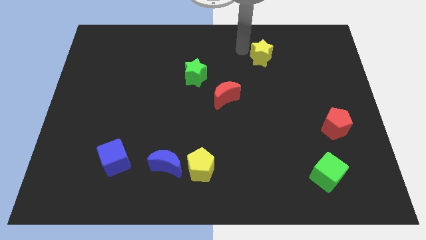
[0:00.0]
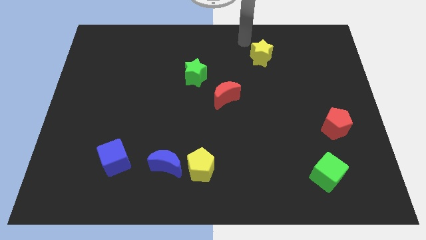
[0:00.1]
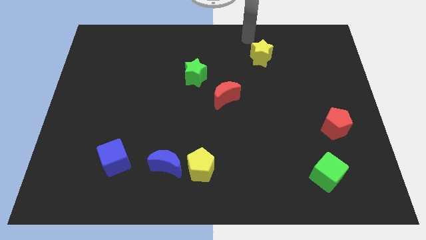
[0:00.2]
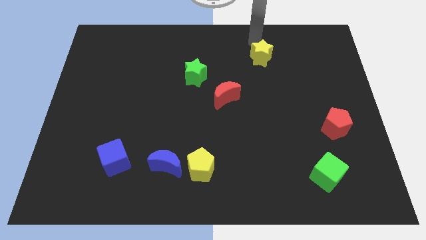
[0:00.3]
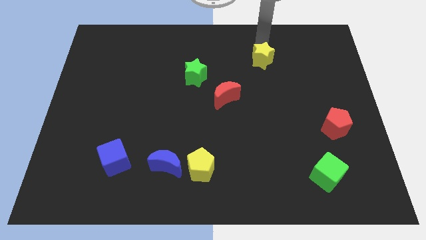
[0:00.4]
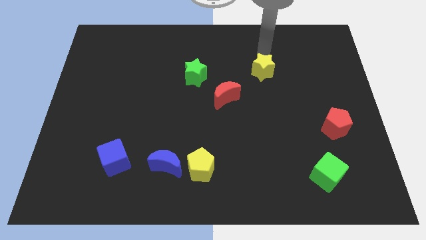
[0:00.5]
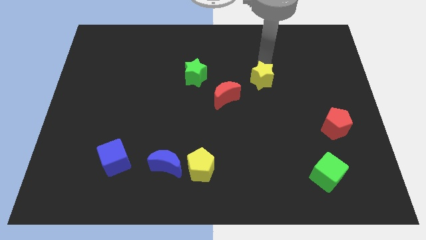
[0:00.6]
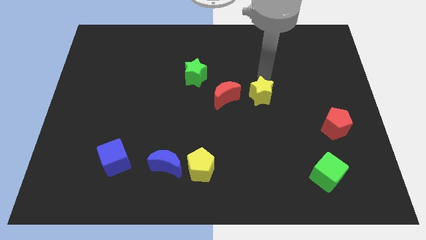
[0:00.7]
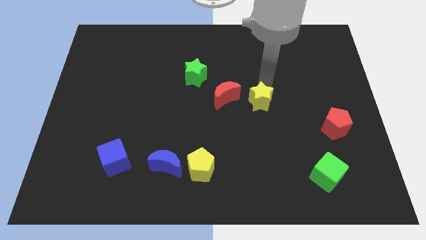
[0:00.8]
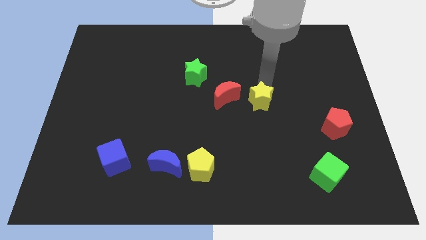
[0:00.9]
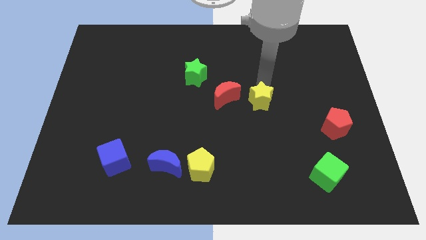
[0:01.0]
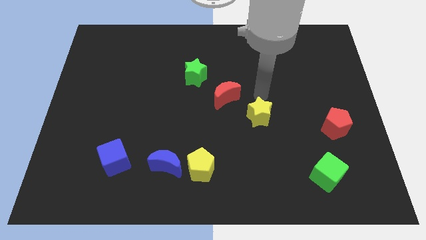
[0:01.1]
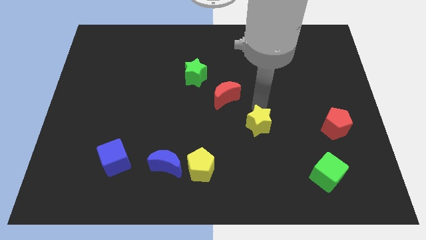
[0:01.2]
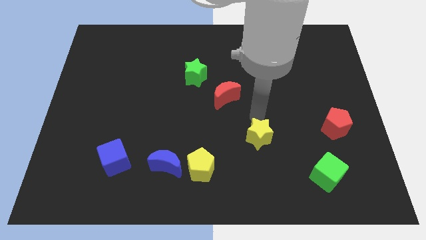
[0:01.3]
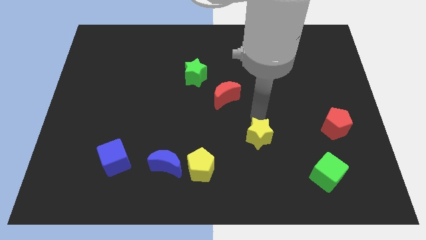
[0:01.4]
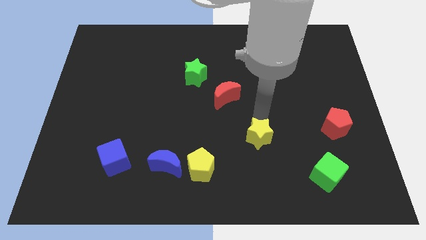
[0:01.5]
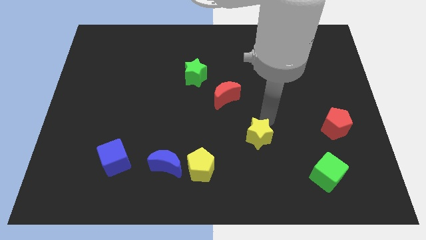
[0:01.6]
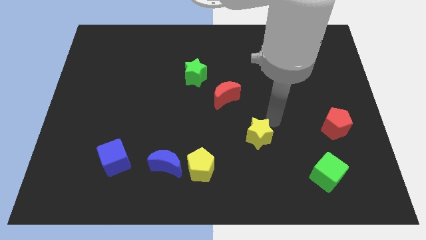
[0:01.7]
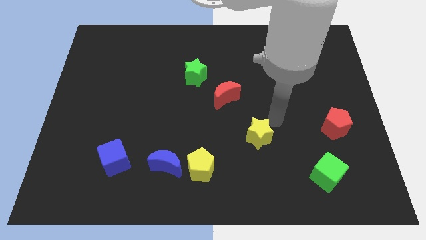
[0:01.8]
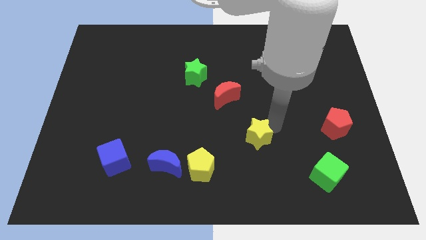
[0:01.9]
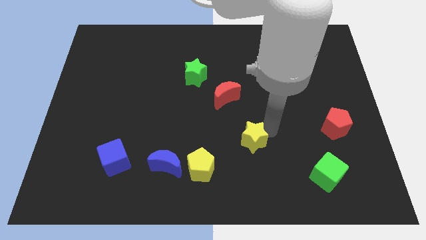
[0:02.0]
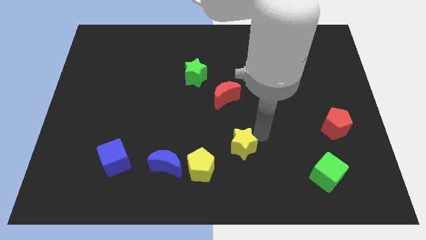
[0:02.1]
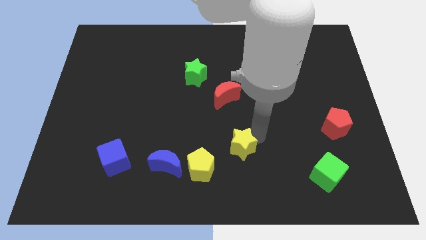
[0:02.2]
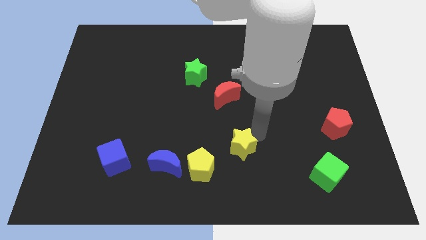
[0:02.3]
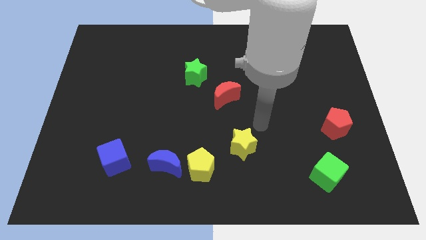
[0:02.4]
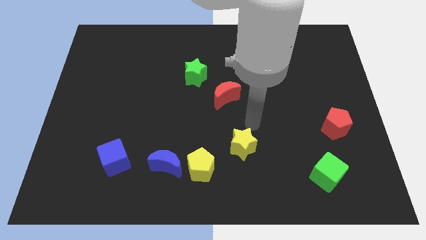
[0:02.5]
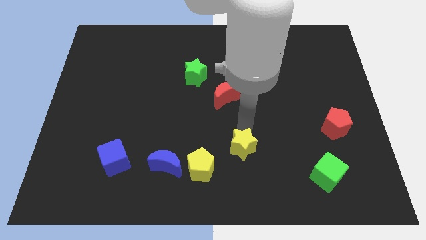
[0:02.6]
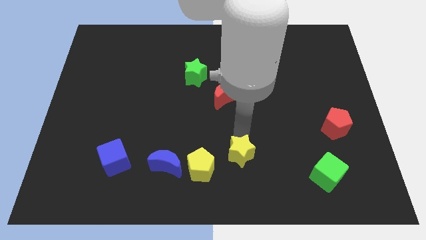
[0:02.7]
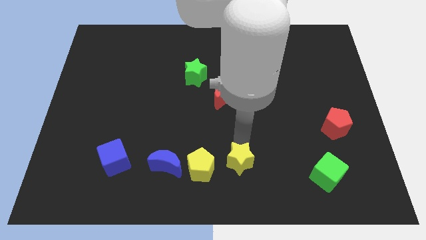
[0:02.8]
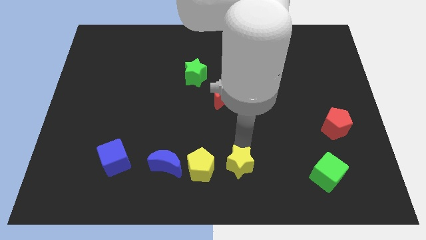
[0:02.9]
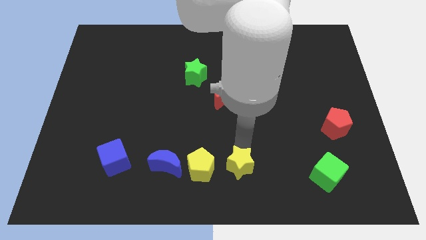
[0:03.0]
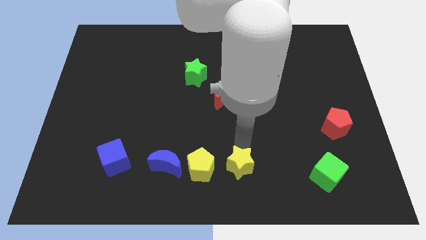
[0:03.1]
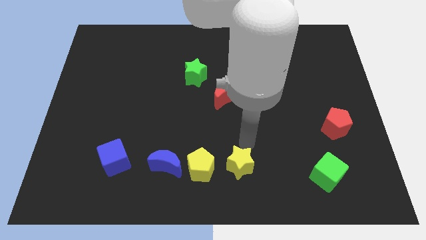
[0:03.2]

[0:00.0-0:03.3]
move the yellow star to the right of yellow pentagon

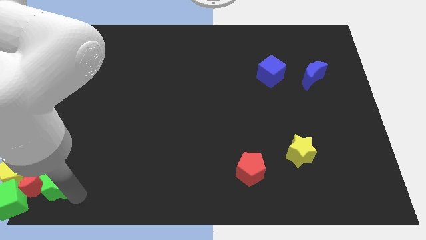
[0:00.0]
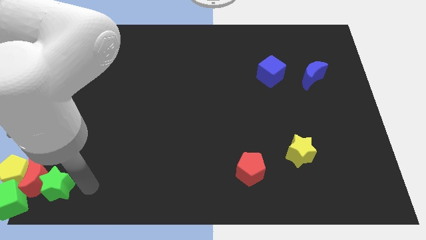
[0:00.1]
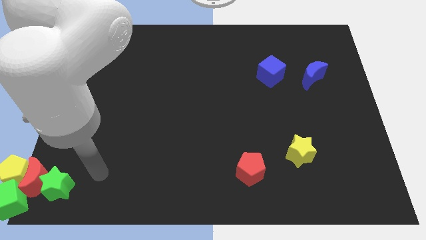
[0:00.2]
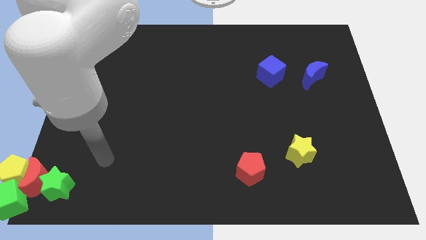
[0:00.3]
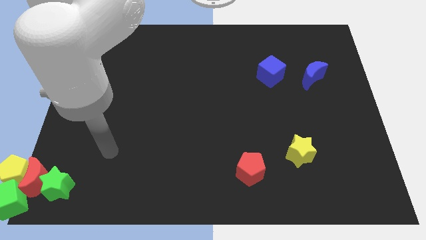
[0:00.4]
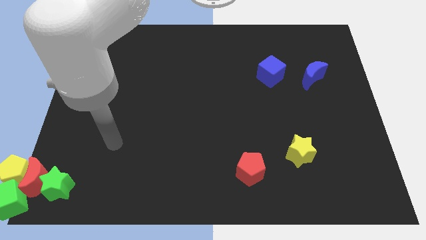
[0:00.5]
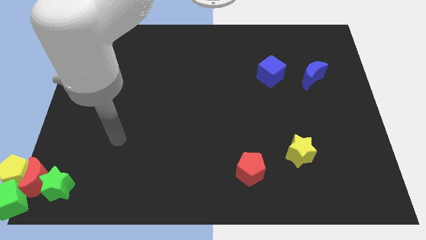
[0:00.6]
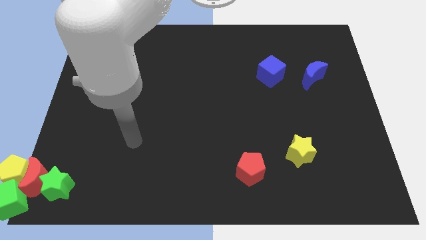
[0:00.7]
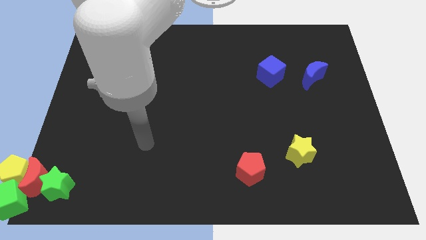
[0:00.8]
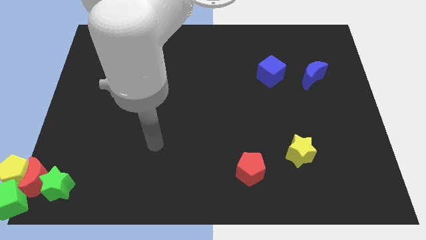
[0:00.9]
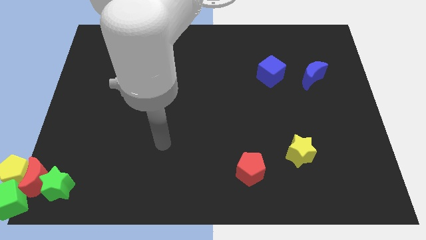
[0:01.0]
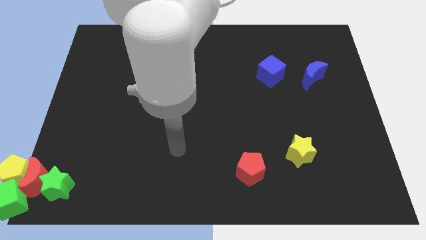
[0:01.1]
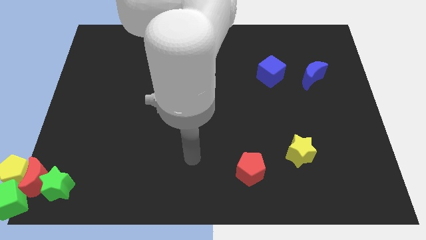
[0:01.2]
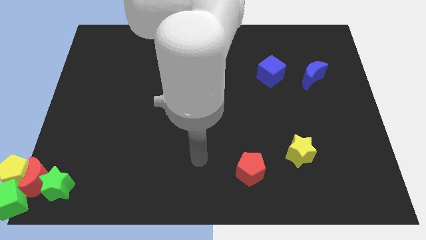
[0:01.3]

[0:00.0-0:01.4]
move your arm away from the bottom left side blocks

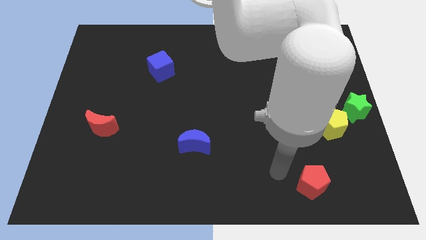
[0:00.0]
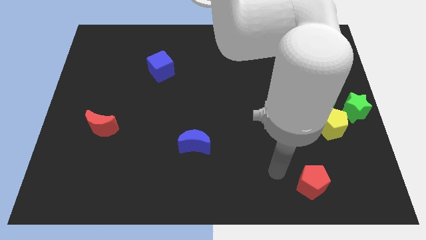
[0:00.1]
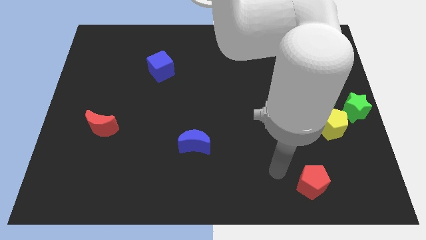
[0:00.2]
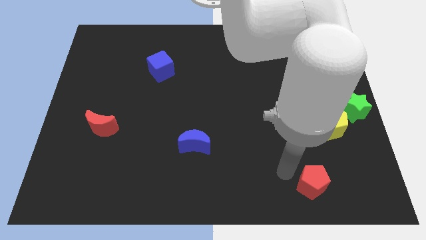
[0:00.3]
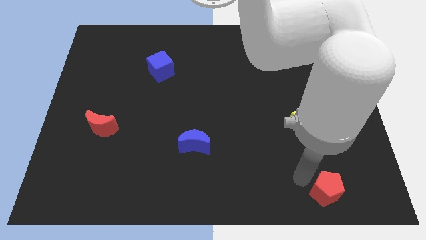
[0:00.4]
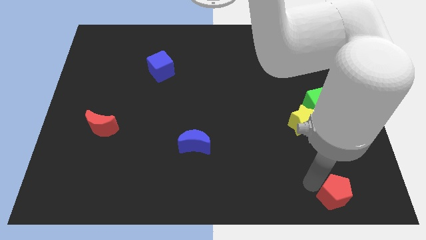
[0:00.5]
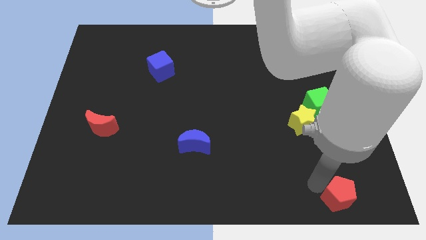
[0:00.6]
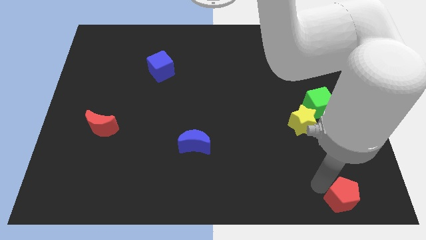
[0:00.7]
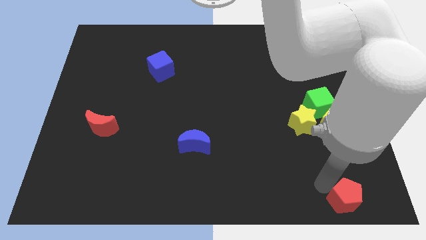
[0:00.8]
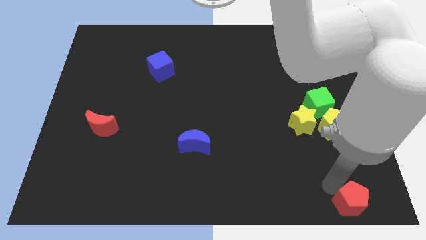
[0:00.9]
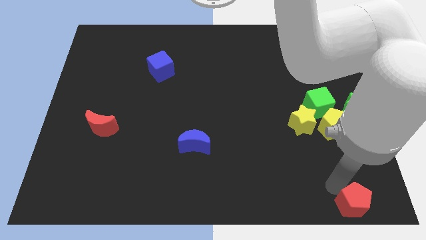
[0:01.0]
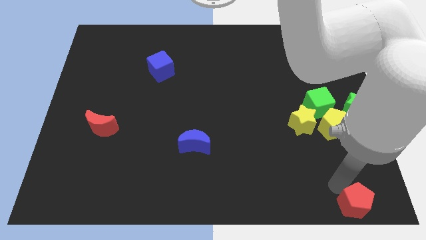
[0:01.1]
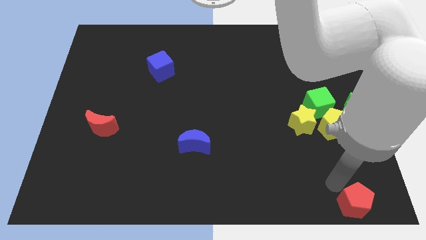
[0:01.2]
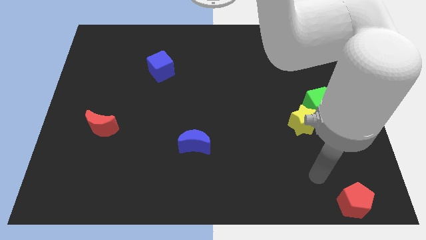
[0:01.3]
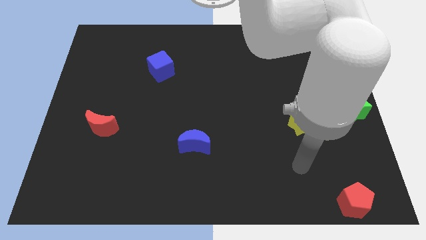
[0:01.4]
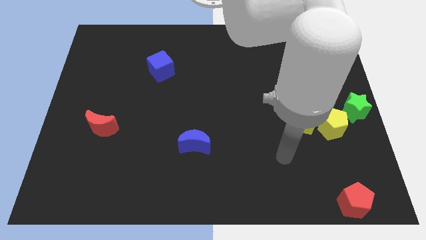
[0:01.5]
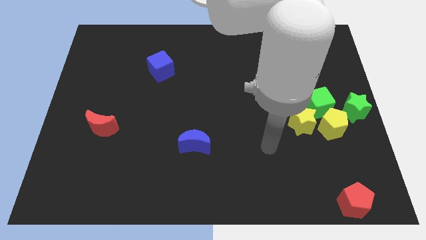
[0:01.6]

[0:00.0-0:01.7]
move the red pentagon towards the bottom right corner of the board

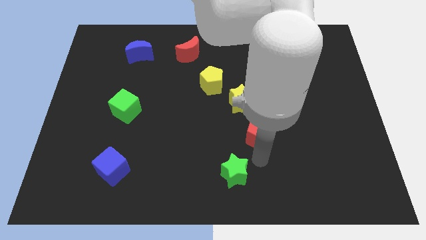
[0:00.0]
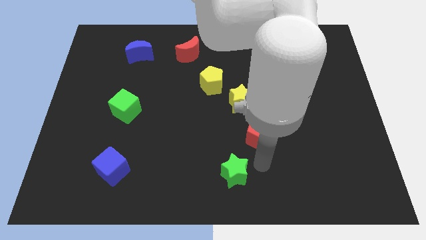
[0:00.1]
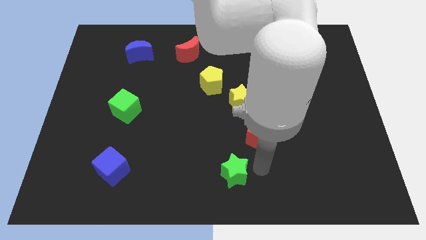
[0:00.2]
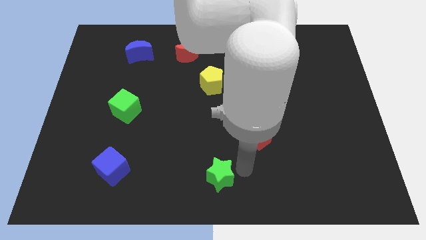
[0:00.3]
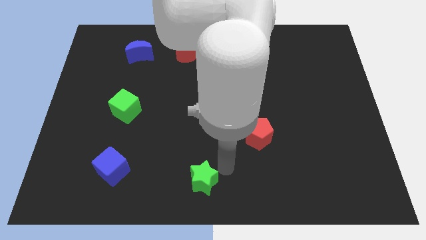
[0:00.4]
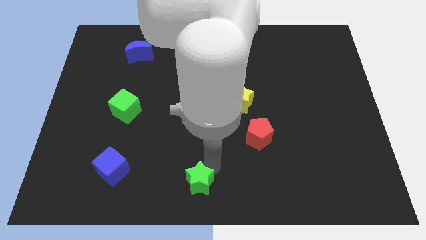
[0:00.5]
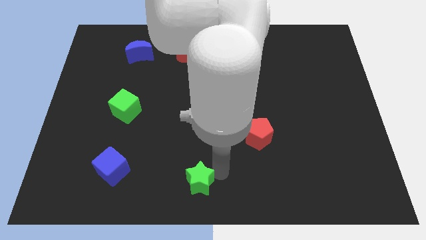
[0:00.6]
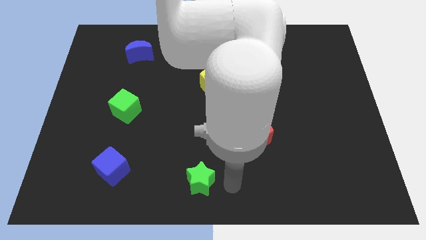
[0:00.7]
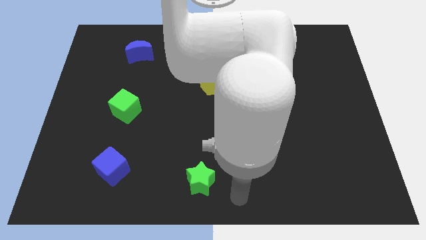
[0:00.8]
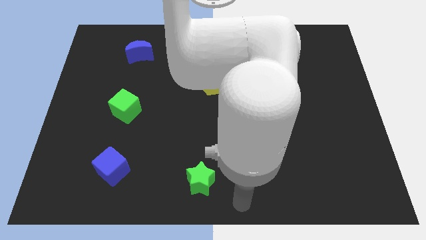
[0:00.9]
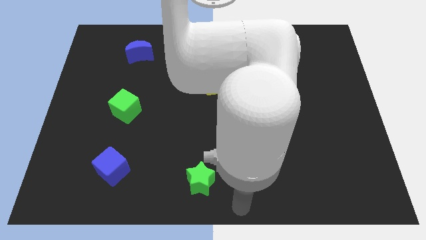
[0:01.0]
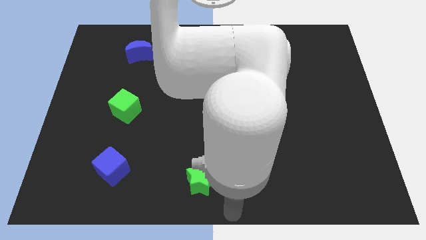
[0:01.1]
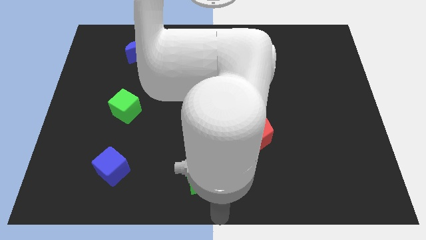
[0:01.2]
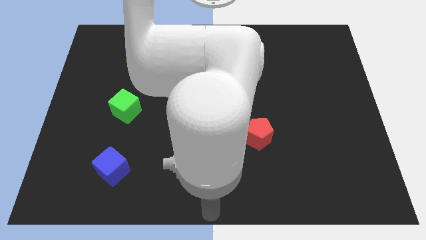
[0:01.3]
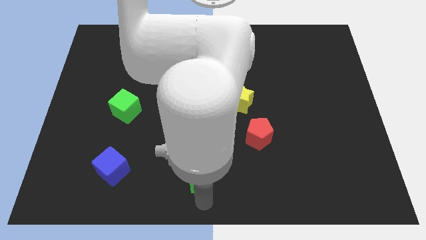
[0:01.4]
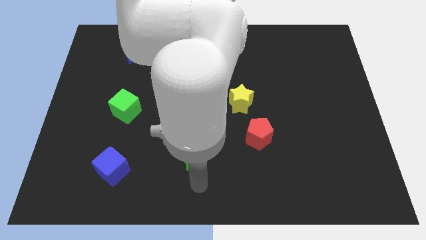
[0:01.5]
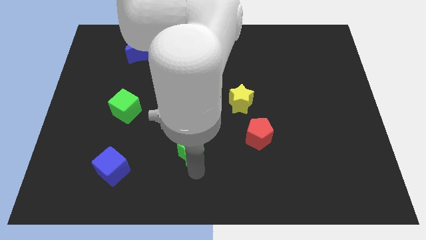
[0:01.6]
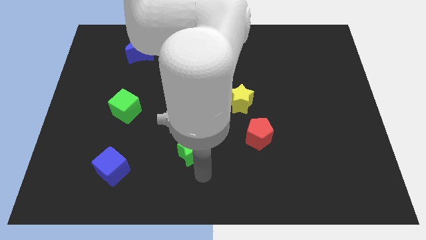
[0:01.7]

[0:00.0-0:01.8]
put the green star in between the red pentagon and blue cube

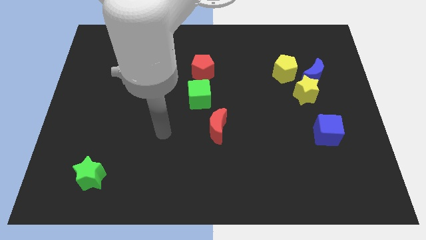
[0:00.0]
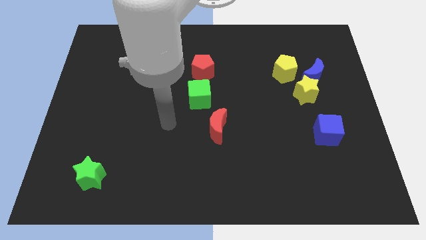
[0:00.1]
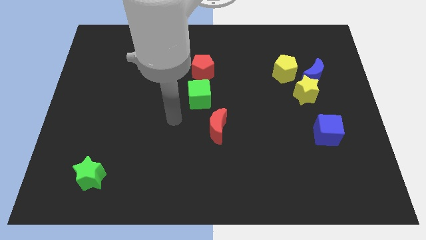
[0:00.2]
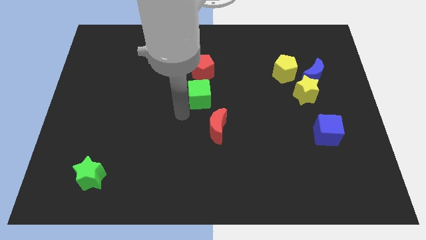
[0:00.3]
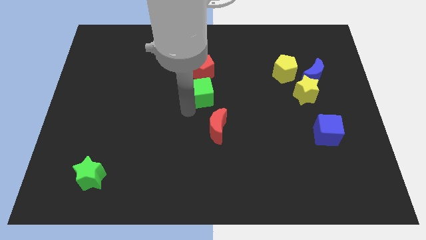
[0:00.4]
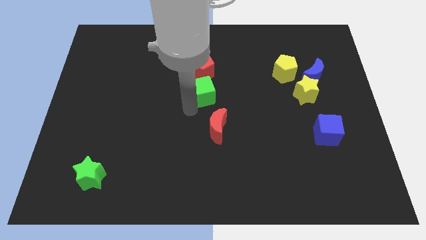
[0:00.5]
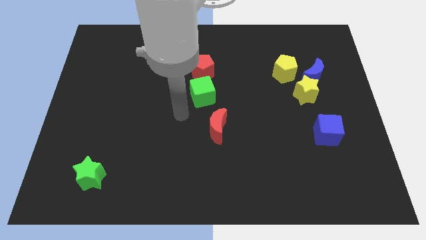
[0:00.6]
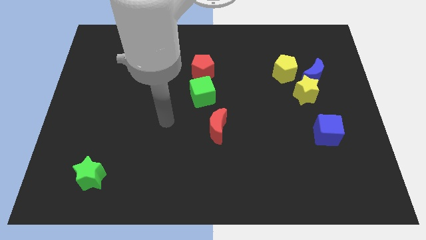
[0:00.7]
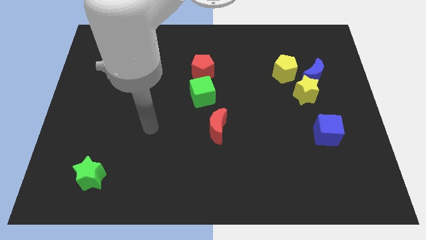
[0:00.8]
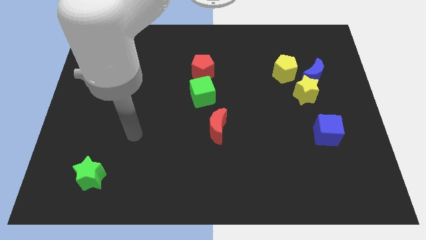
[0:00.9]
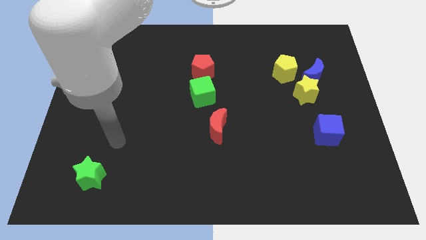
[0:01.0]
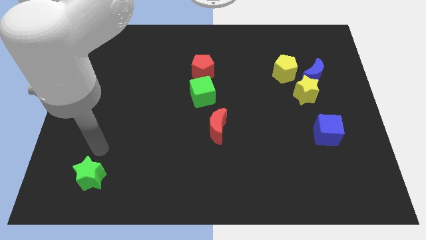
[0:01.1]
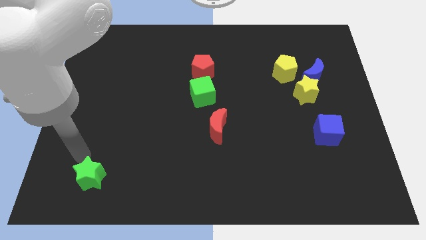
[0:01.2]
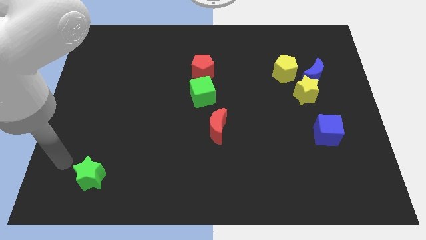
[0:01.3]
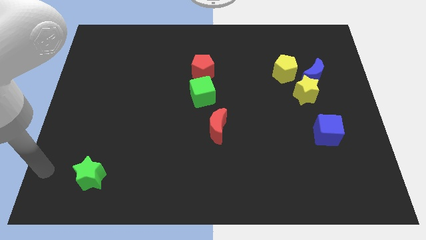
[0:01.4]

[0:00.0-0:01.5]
push the green cube slightly to the top side of the board
